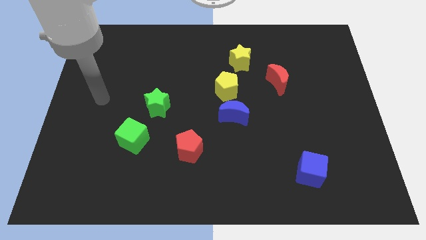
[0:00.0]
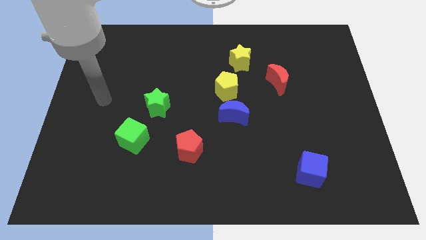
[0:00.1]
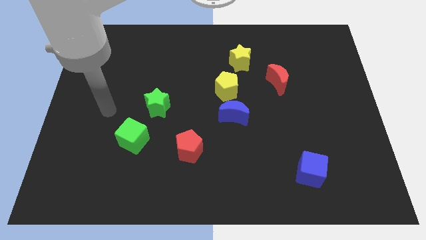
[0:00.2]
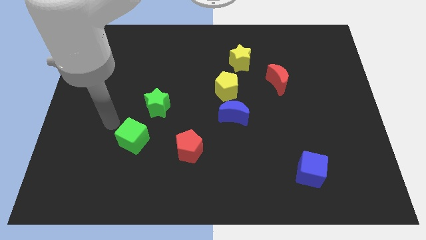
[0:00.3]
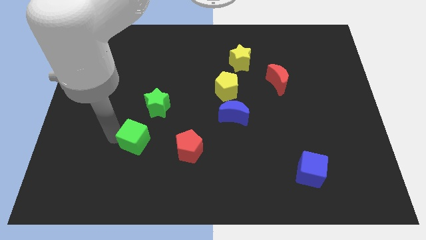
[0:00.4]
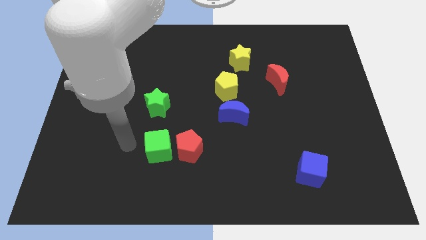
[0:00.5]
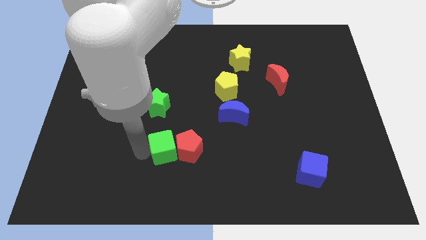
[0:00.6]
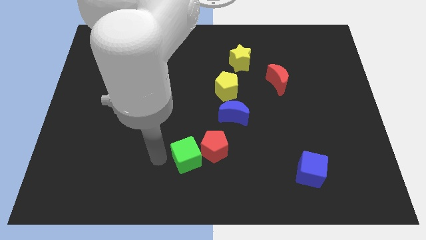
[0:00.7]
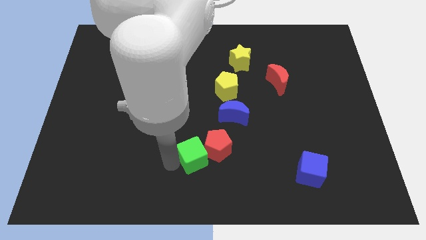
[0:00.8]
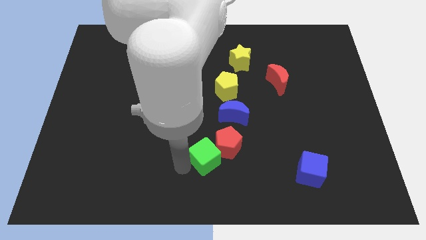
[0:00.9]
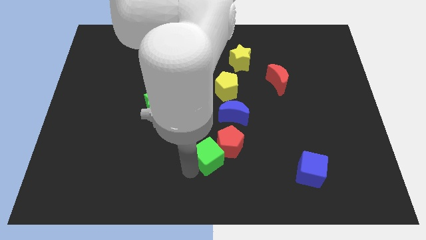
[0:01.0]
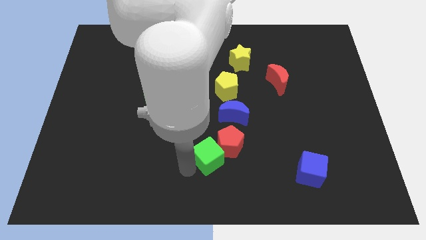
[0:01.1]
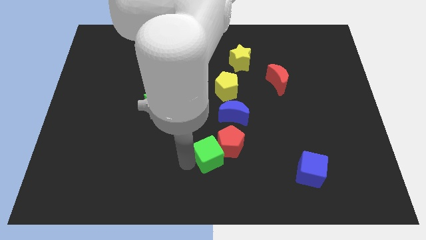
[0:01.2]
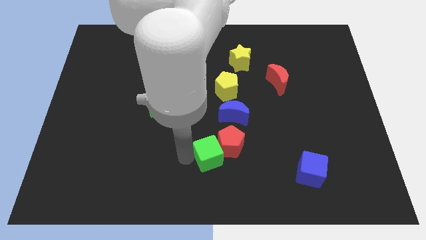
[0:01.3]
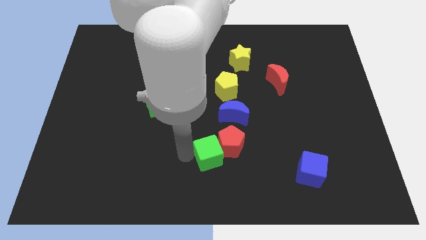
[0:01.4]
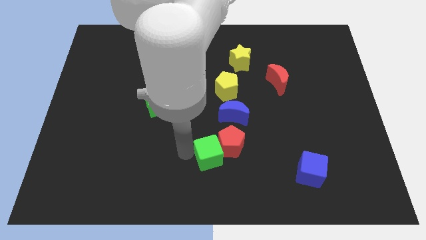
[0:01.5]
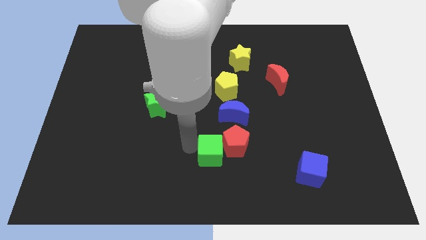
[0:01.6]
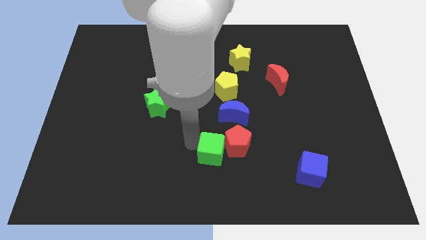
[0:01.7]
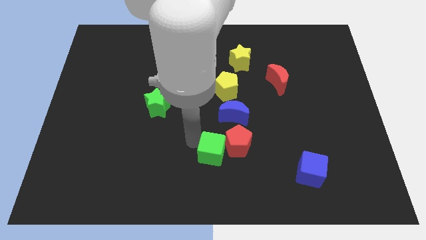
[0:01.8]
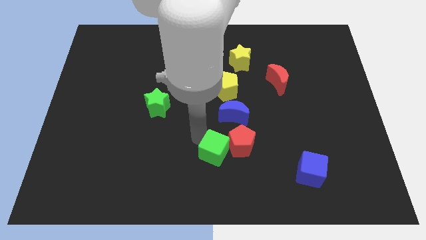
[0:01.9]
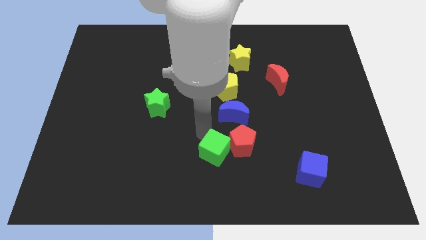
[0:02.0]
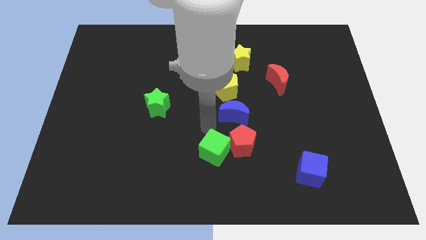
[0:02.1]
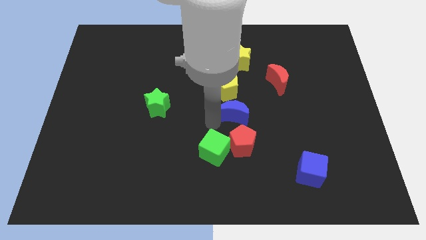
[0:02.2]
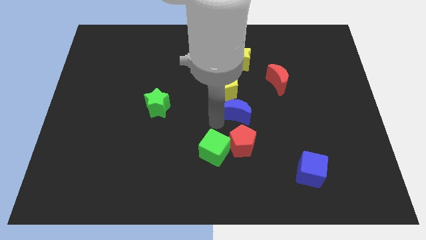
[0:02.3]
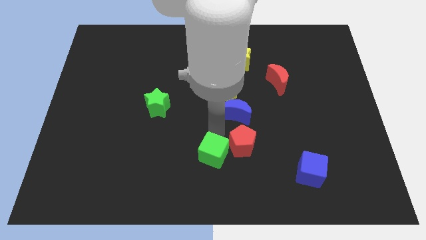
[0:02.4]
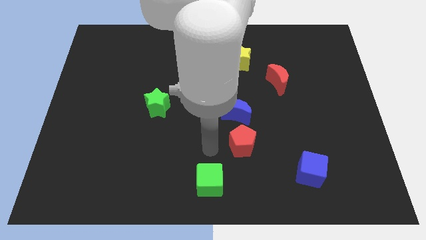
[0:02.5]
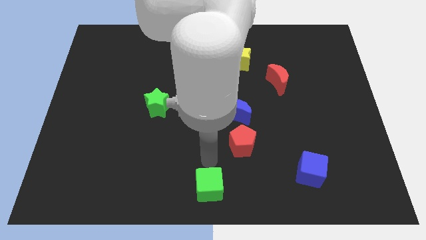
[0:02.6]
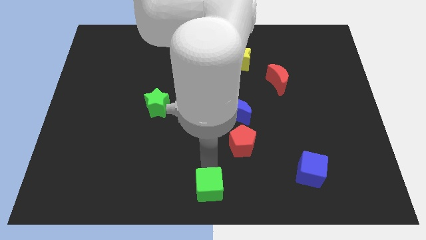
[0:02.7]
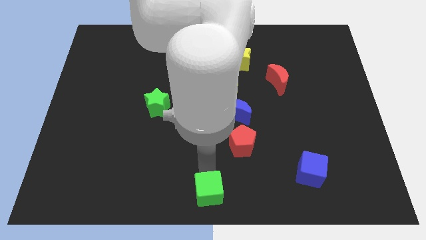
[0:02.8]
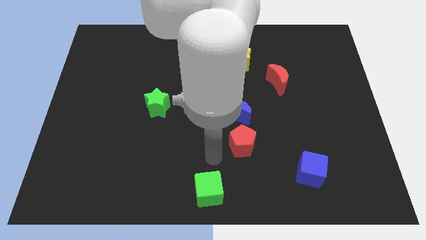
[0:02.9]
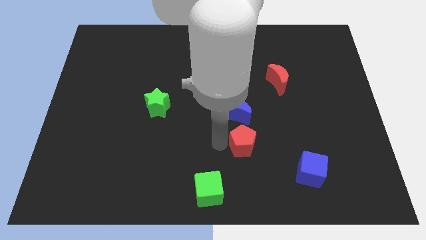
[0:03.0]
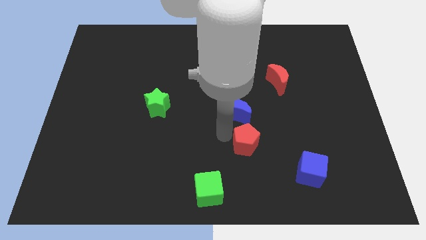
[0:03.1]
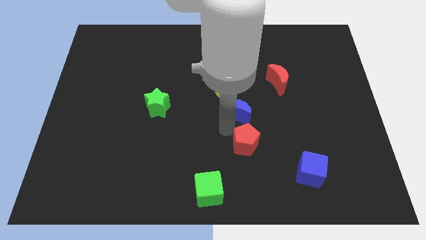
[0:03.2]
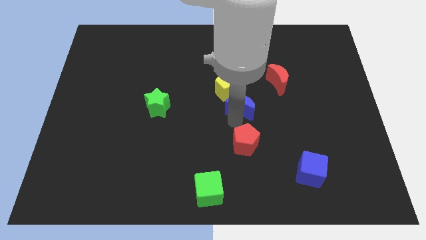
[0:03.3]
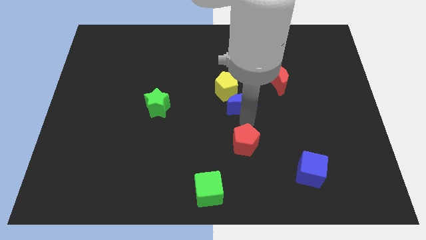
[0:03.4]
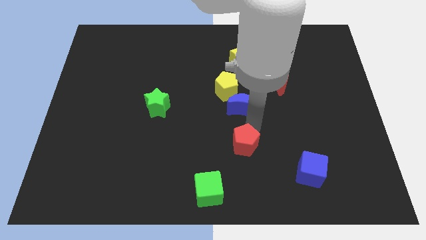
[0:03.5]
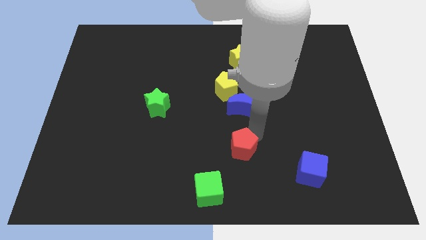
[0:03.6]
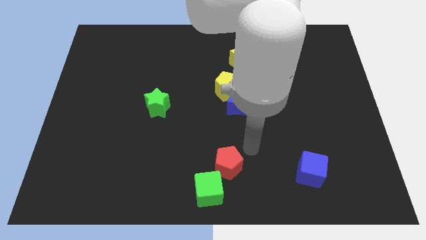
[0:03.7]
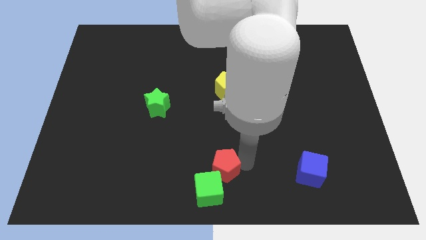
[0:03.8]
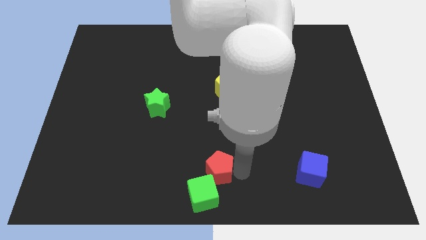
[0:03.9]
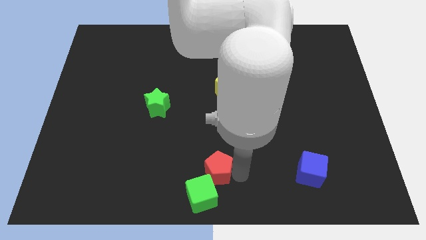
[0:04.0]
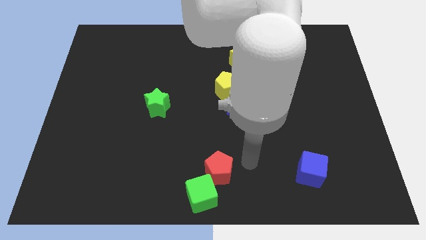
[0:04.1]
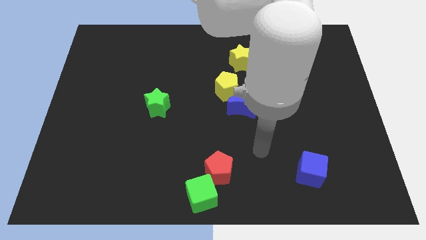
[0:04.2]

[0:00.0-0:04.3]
push the red pentagon into the green cube

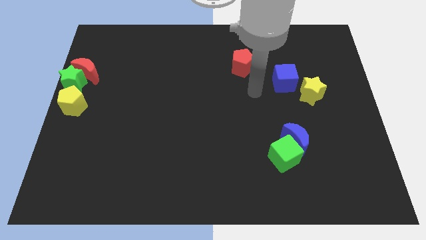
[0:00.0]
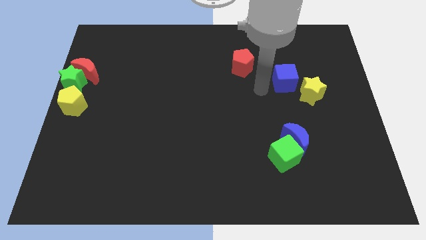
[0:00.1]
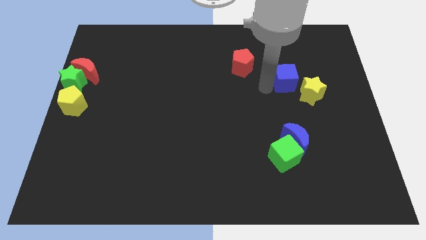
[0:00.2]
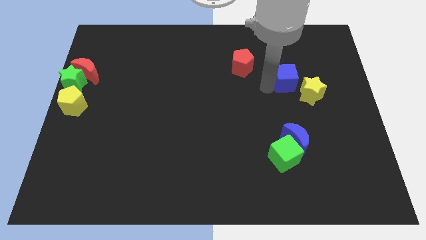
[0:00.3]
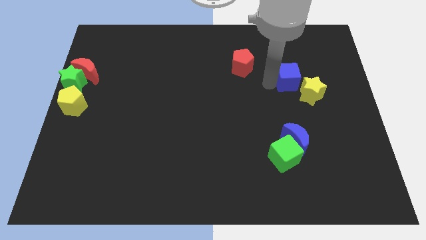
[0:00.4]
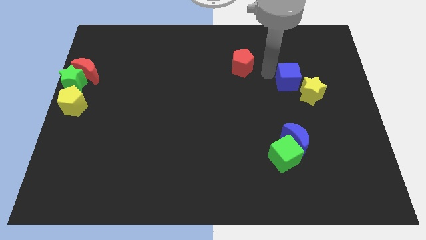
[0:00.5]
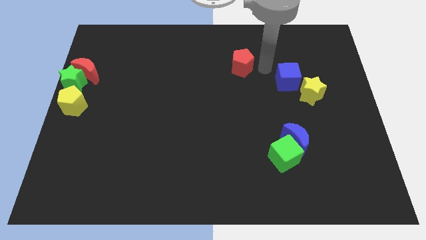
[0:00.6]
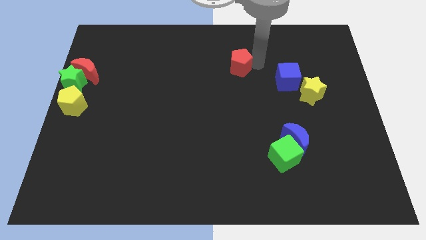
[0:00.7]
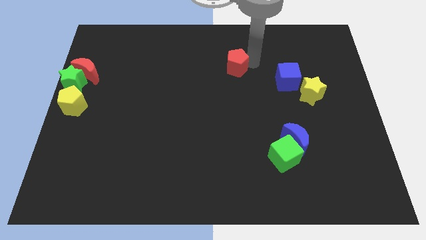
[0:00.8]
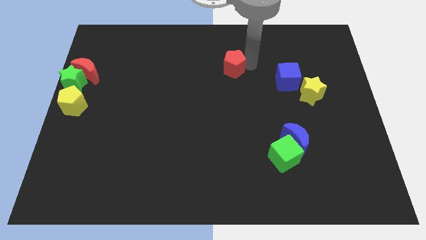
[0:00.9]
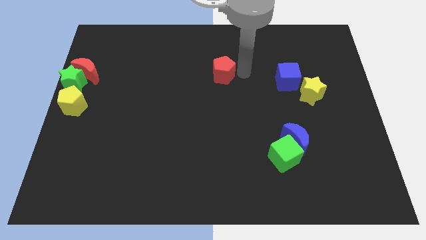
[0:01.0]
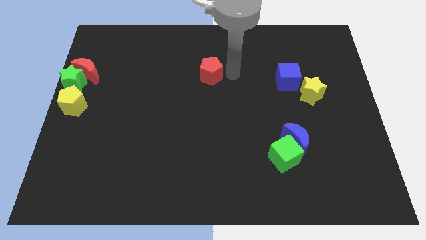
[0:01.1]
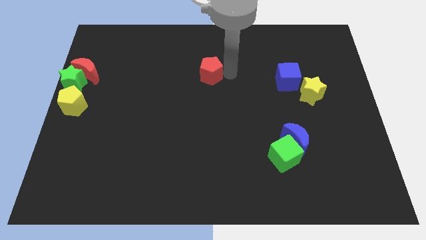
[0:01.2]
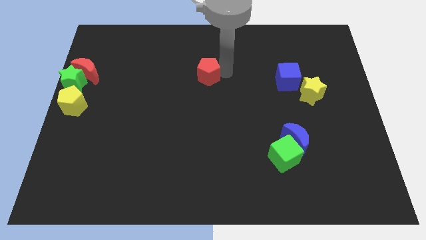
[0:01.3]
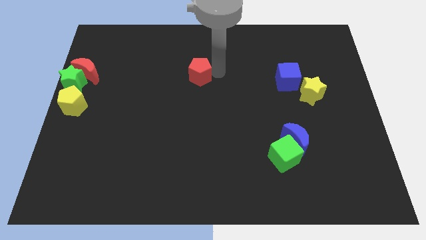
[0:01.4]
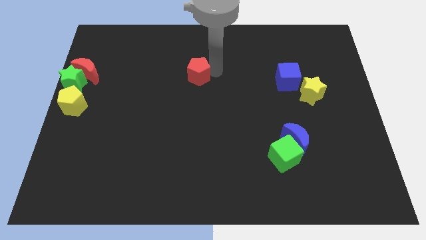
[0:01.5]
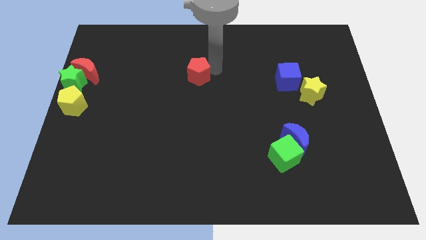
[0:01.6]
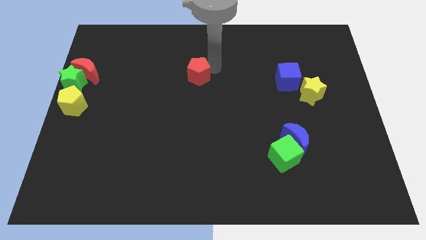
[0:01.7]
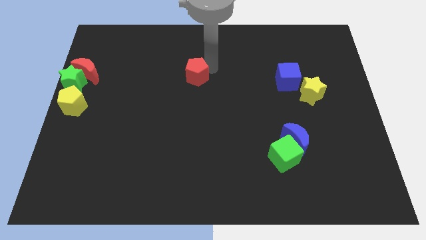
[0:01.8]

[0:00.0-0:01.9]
place the red pentagon in between red crescent and blue cube

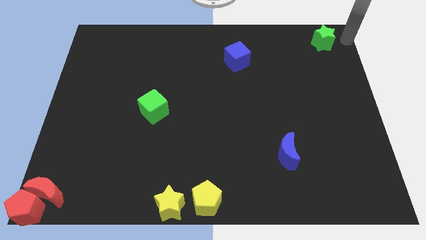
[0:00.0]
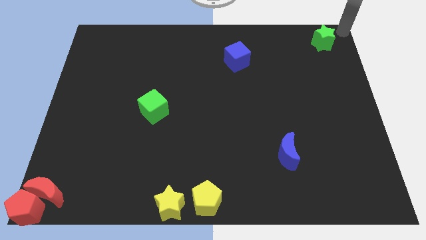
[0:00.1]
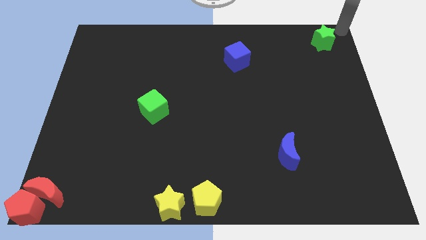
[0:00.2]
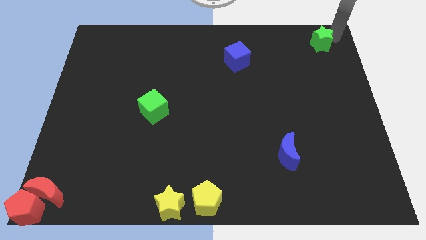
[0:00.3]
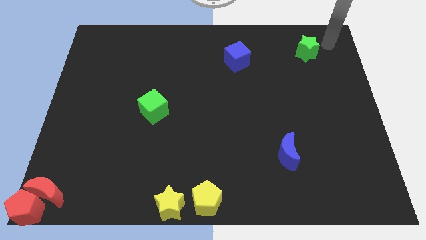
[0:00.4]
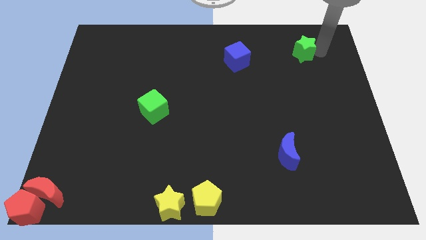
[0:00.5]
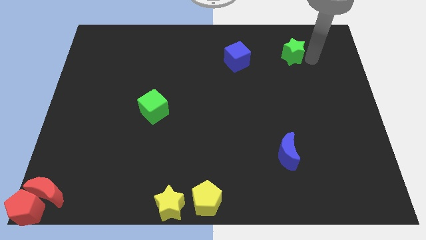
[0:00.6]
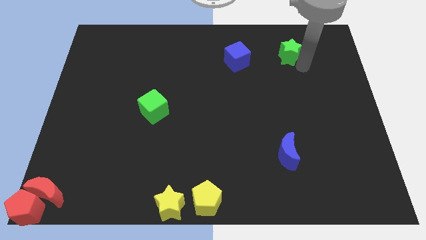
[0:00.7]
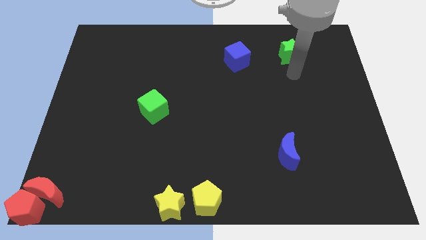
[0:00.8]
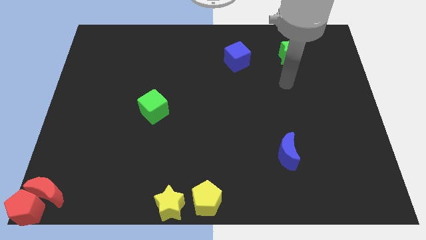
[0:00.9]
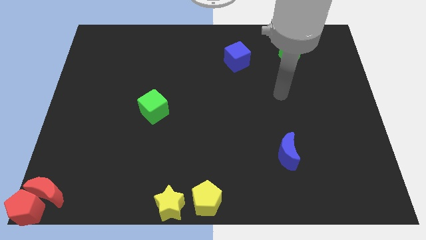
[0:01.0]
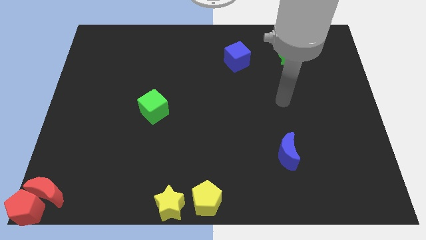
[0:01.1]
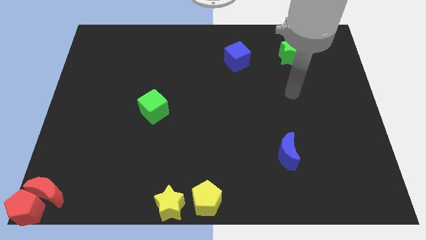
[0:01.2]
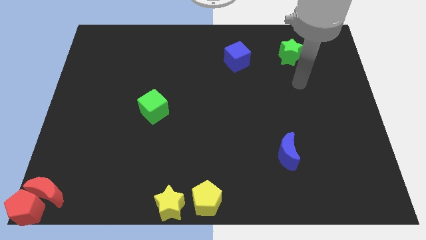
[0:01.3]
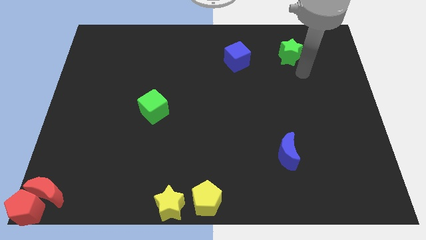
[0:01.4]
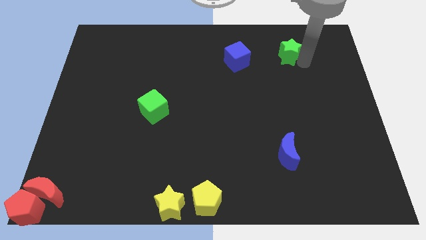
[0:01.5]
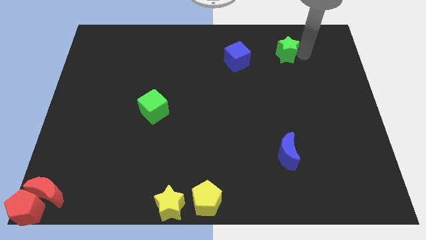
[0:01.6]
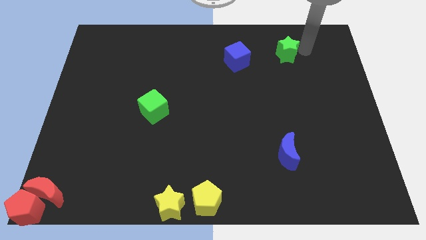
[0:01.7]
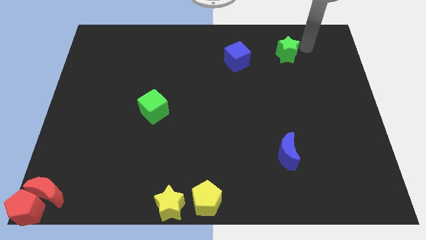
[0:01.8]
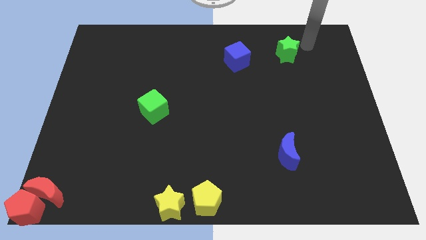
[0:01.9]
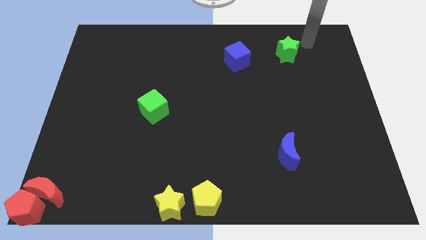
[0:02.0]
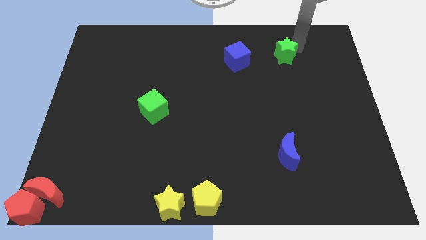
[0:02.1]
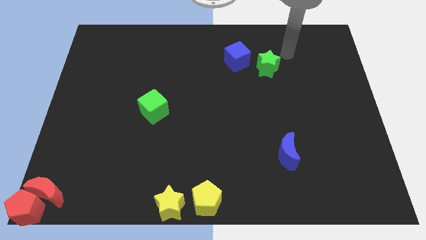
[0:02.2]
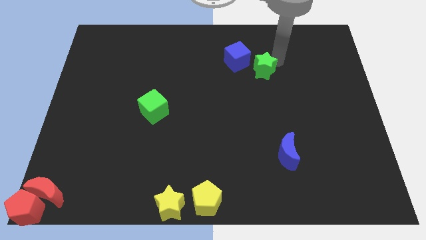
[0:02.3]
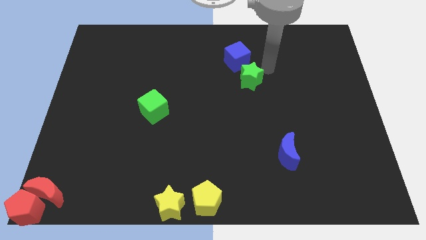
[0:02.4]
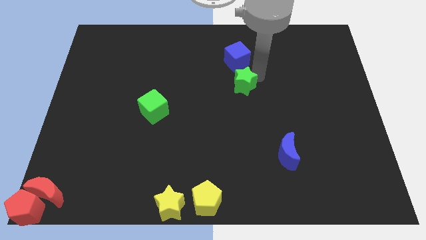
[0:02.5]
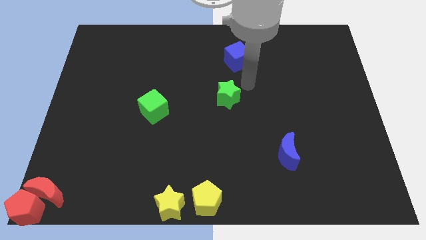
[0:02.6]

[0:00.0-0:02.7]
move the green star to the bottom side of the blue cube
